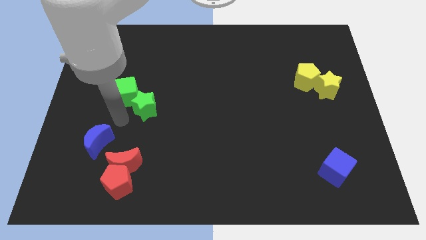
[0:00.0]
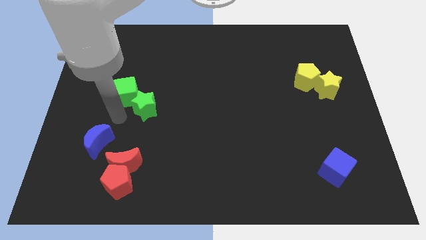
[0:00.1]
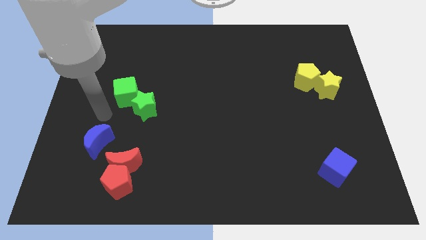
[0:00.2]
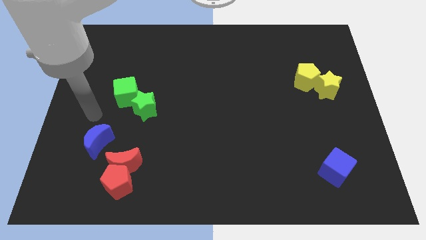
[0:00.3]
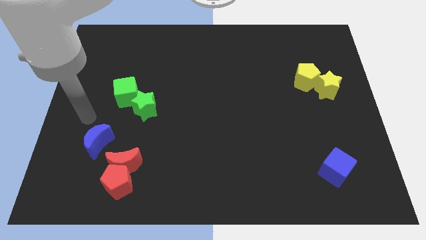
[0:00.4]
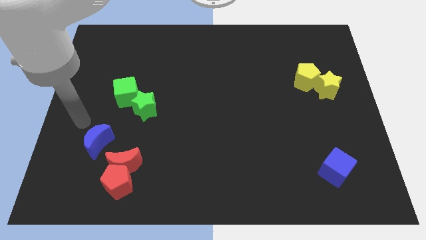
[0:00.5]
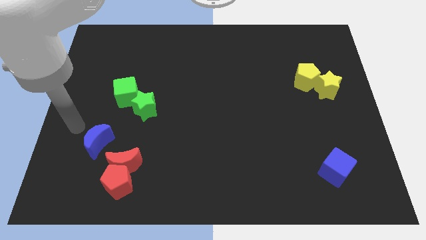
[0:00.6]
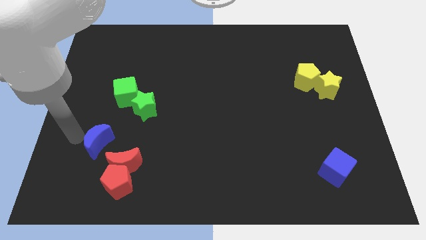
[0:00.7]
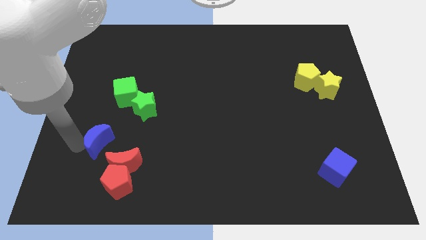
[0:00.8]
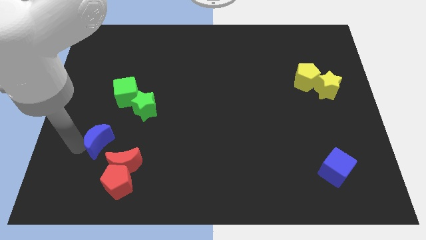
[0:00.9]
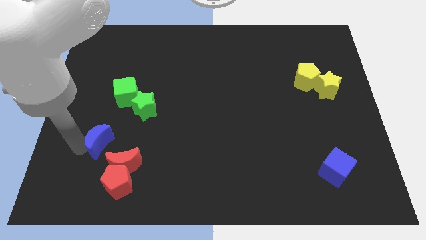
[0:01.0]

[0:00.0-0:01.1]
tap the left side of the blue crescent

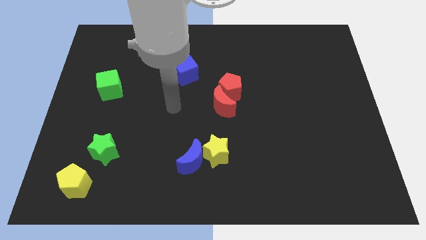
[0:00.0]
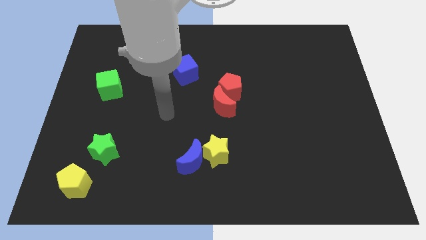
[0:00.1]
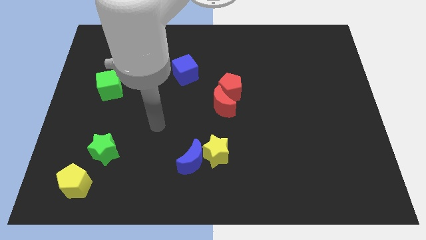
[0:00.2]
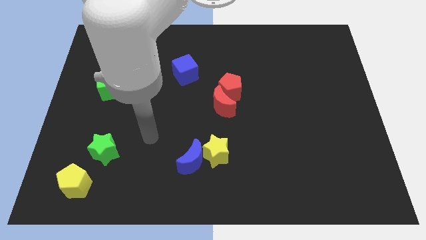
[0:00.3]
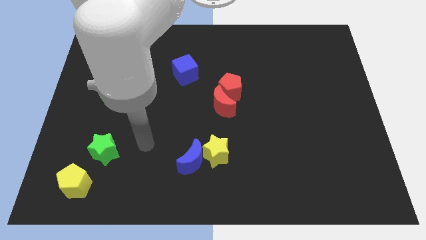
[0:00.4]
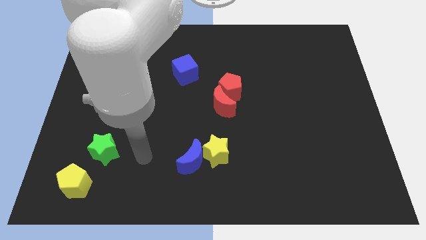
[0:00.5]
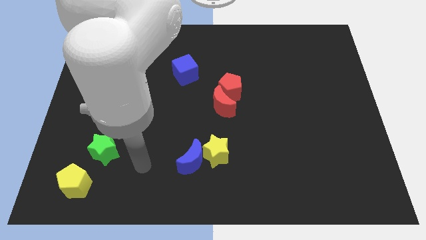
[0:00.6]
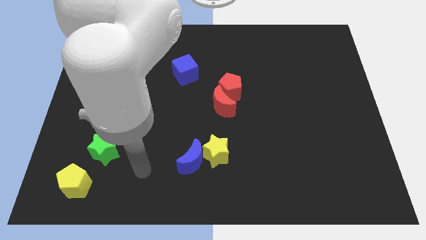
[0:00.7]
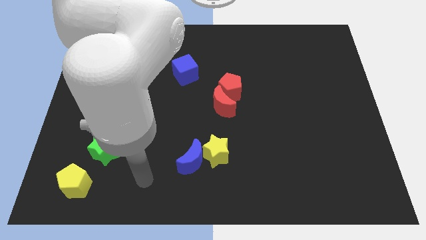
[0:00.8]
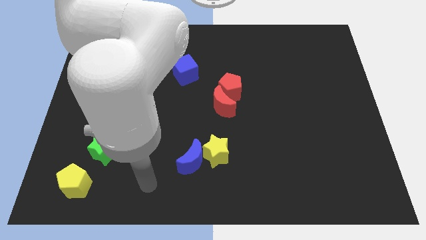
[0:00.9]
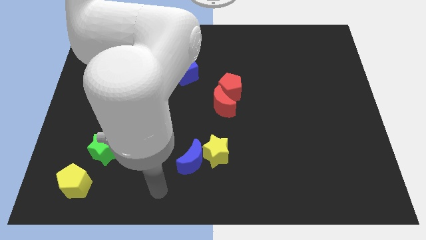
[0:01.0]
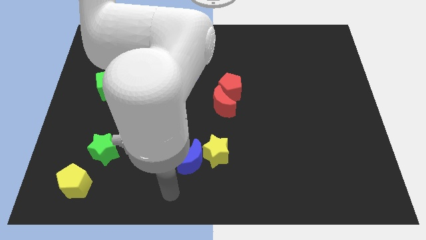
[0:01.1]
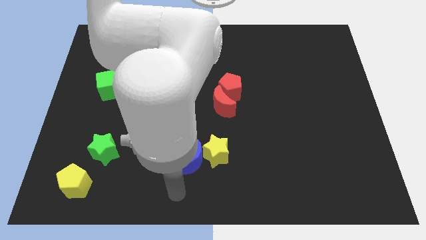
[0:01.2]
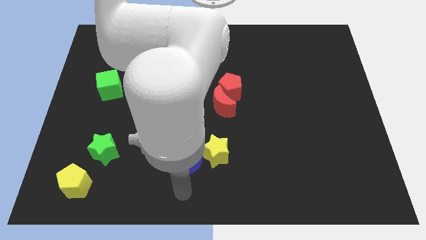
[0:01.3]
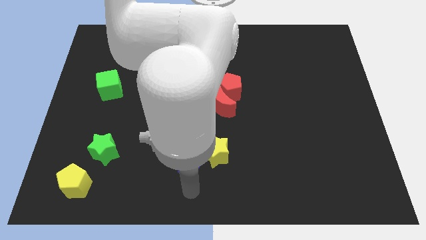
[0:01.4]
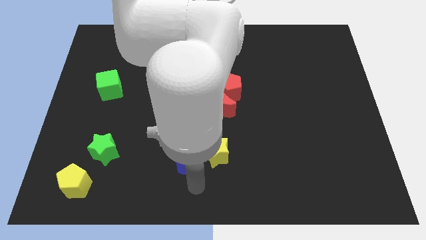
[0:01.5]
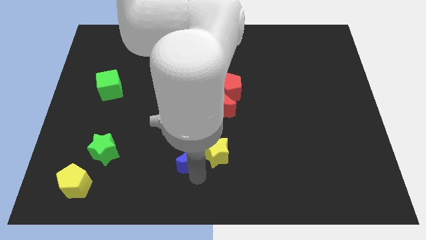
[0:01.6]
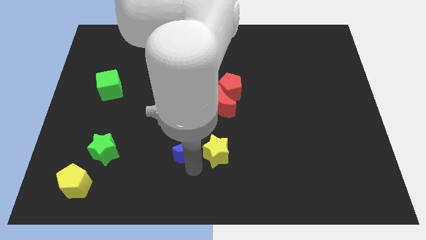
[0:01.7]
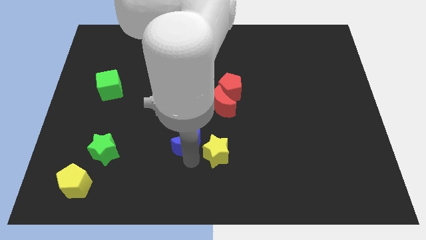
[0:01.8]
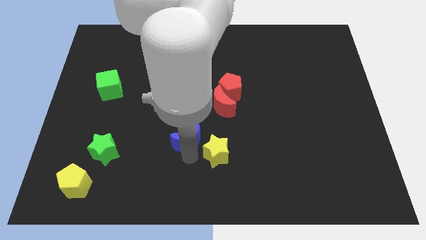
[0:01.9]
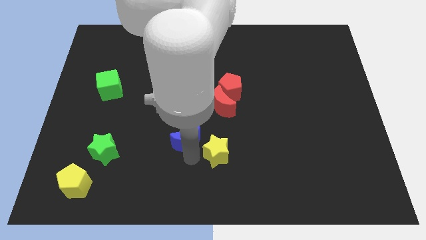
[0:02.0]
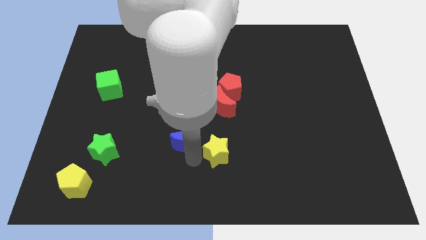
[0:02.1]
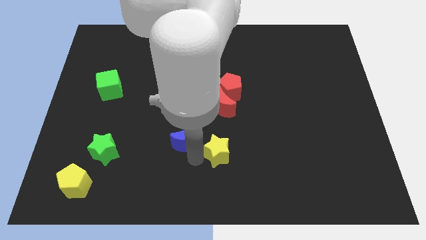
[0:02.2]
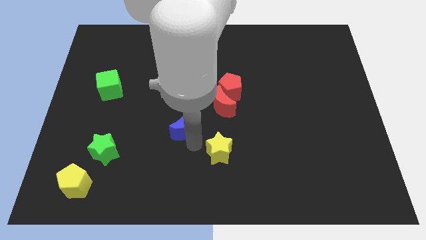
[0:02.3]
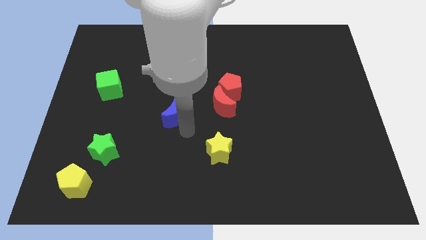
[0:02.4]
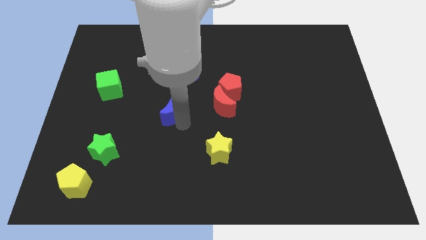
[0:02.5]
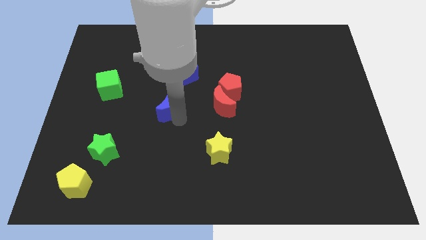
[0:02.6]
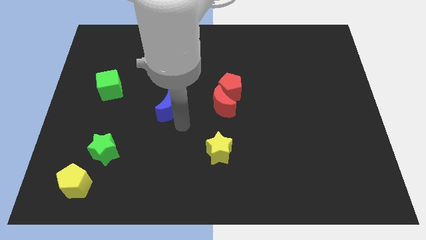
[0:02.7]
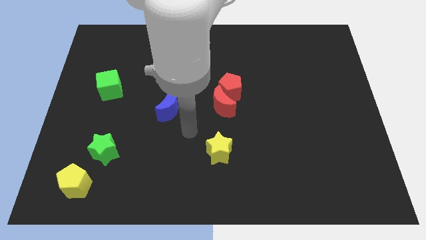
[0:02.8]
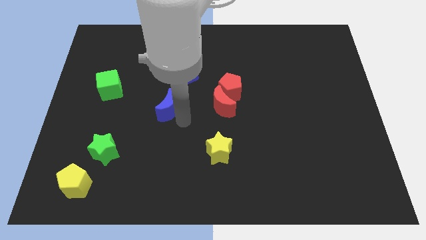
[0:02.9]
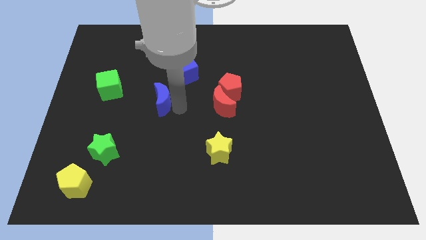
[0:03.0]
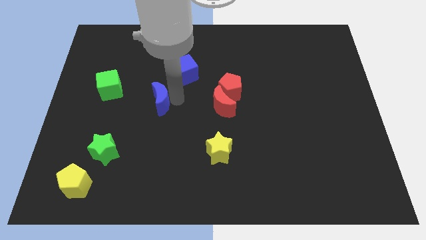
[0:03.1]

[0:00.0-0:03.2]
move the blue moon diagonally on the bottom left side of the blue cube

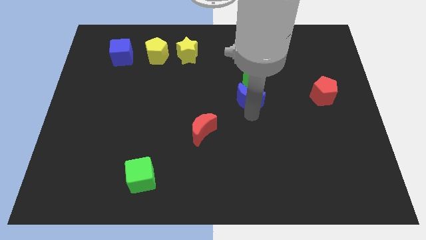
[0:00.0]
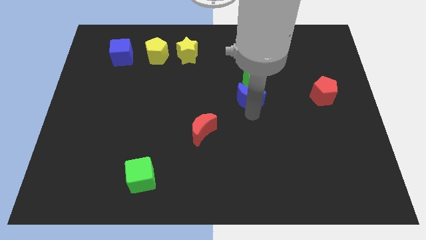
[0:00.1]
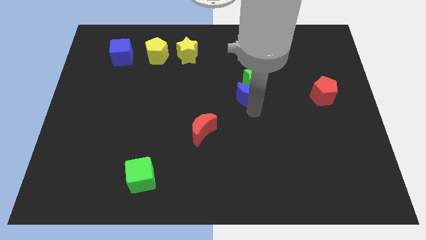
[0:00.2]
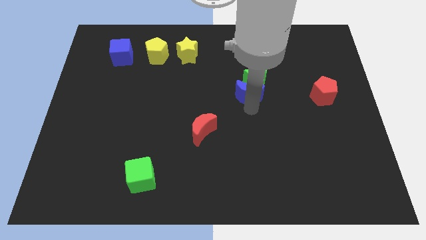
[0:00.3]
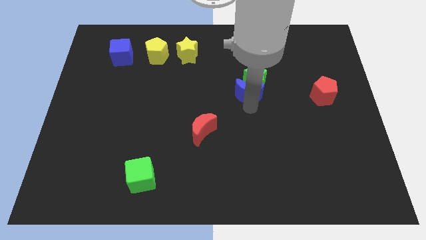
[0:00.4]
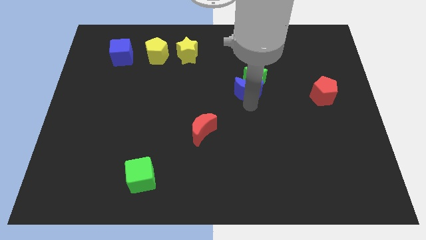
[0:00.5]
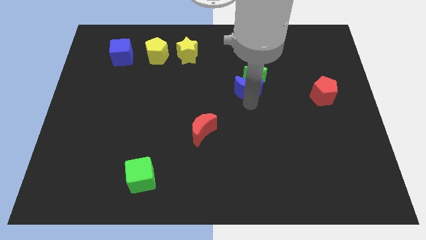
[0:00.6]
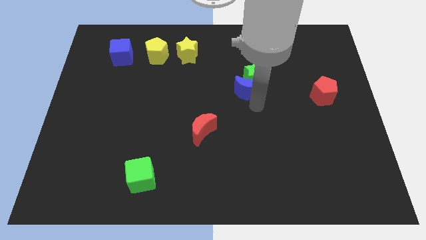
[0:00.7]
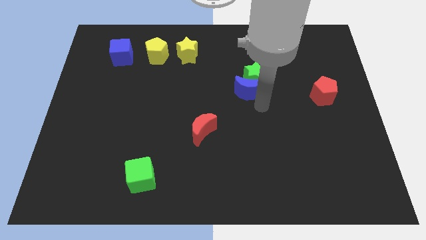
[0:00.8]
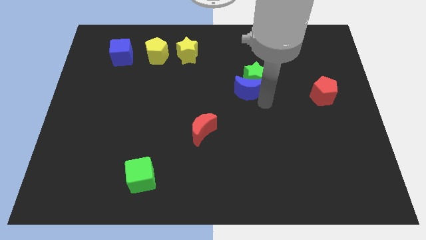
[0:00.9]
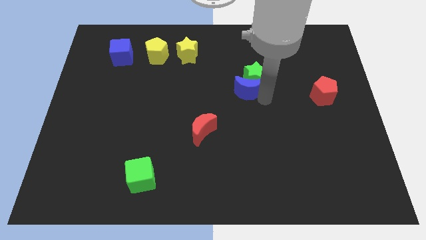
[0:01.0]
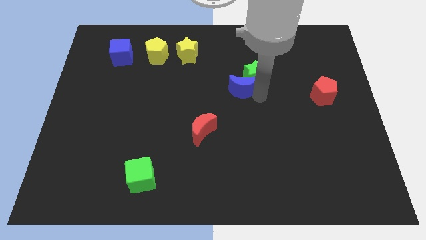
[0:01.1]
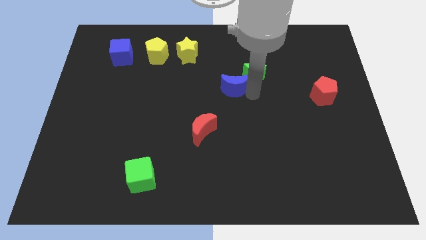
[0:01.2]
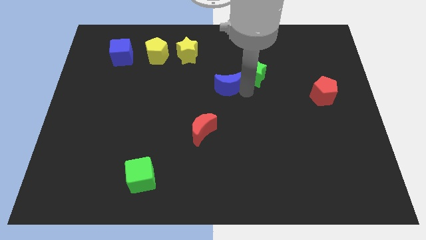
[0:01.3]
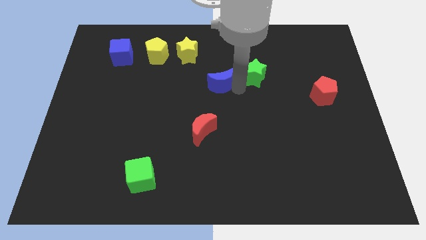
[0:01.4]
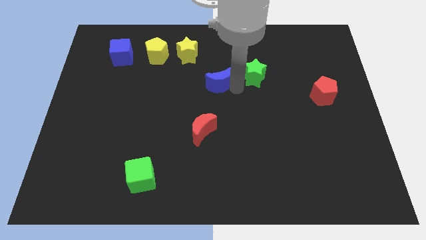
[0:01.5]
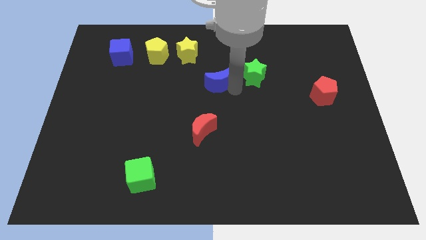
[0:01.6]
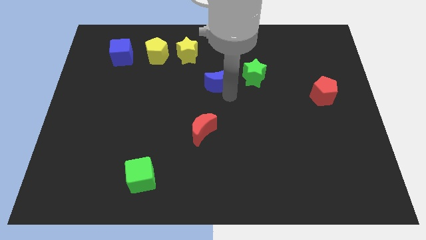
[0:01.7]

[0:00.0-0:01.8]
separate blue moon from green star

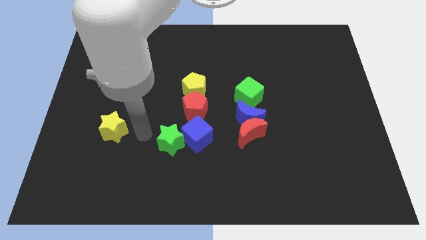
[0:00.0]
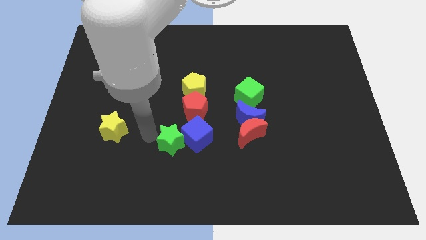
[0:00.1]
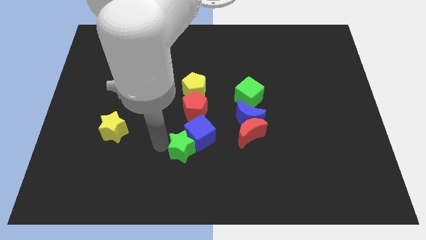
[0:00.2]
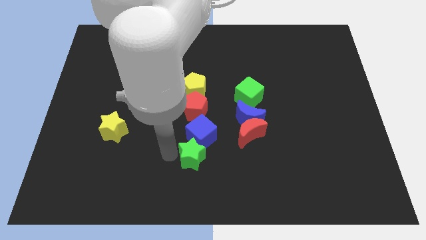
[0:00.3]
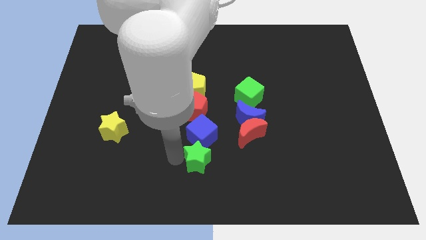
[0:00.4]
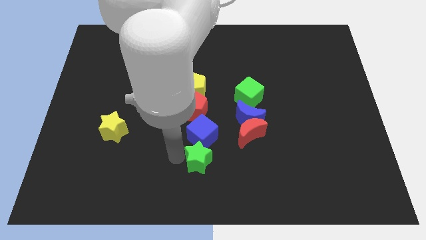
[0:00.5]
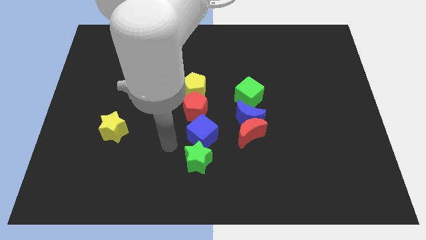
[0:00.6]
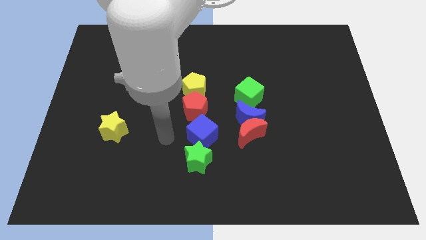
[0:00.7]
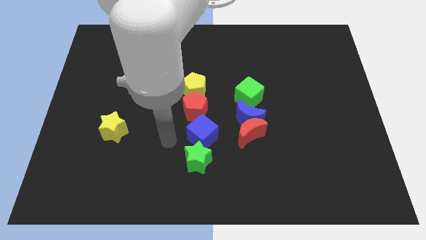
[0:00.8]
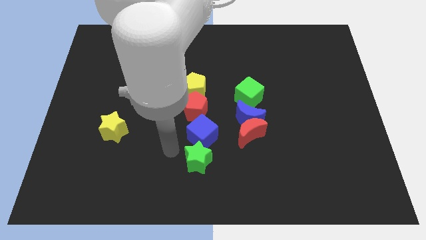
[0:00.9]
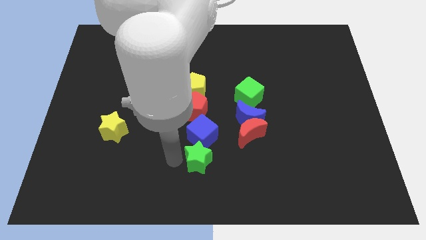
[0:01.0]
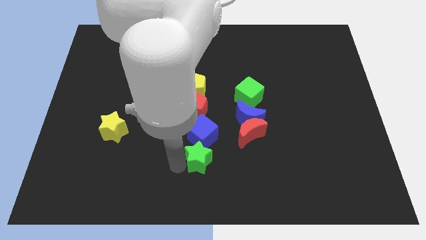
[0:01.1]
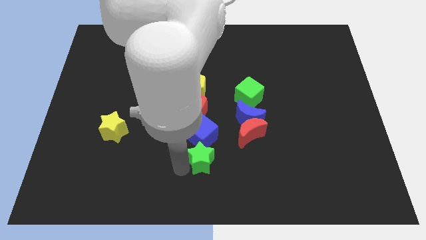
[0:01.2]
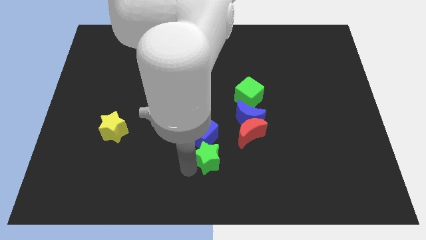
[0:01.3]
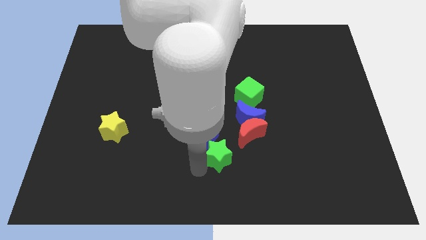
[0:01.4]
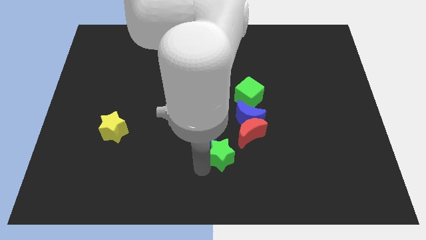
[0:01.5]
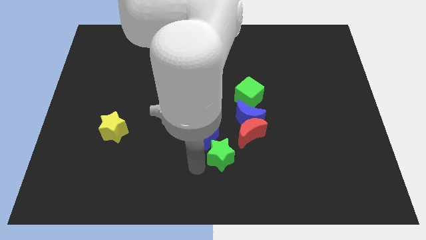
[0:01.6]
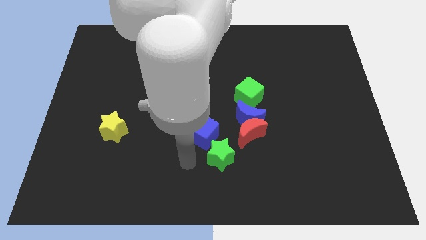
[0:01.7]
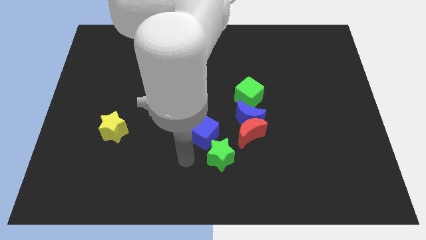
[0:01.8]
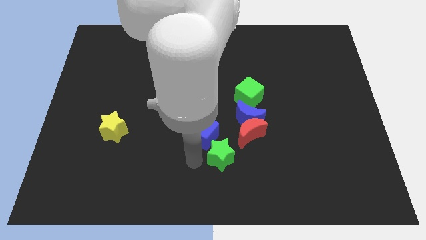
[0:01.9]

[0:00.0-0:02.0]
move the green star to the bottom center of the board

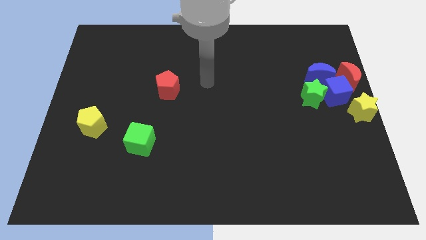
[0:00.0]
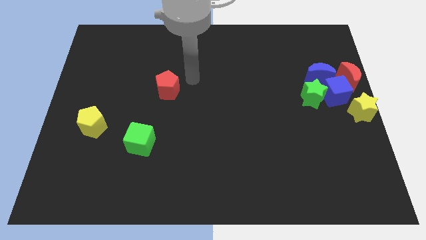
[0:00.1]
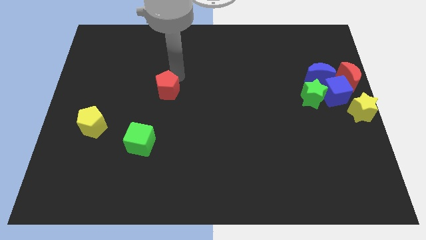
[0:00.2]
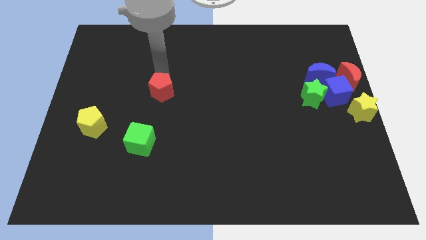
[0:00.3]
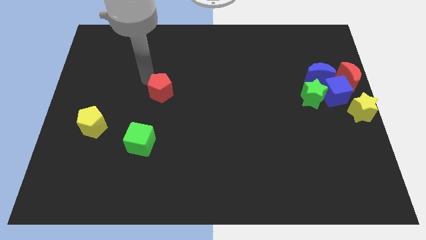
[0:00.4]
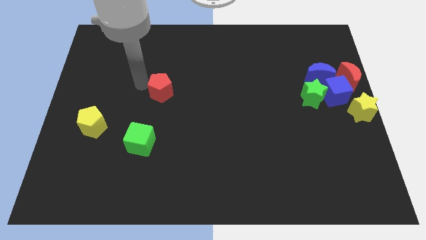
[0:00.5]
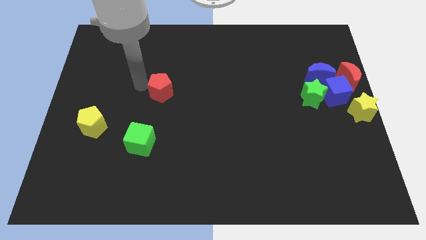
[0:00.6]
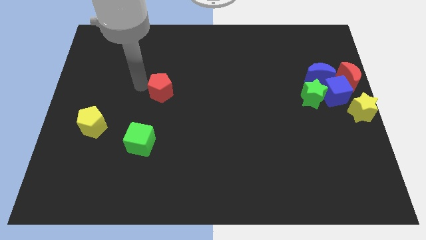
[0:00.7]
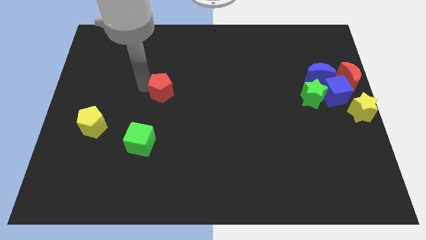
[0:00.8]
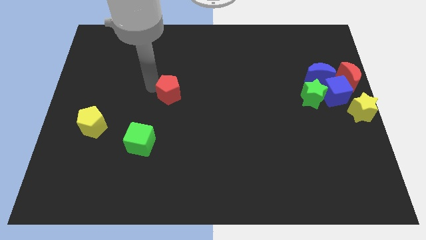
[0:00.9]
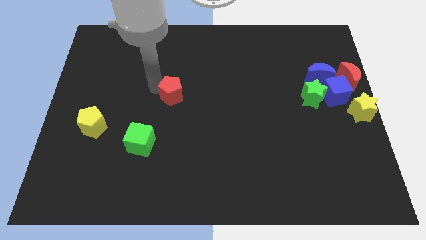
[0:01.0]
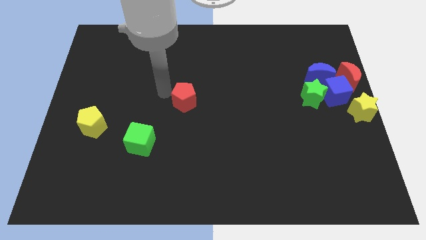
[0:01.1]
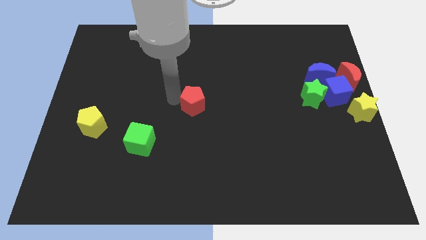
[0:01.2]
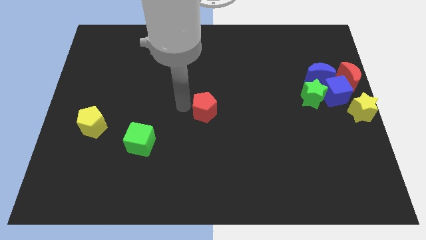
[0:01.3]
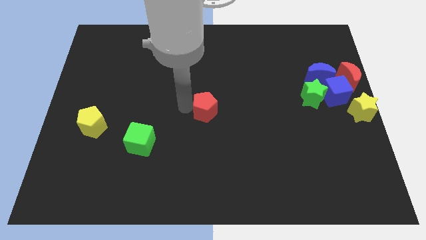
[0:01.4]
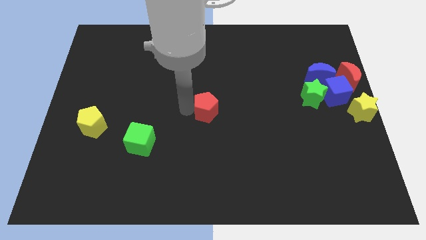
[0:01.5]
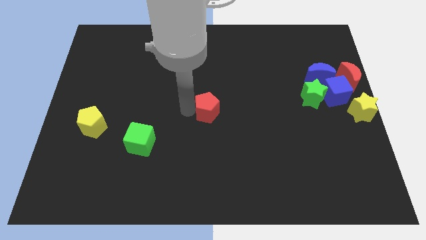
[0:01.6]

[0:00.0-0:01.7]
push the red pentagon to the center of the board
